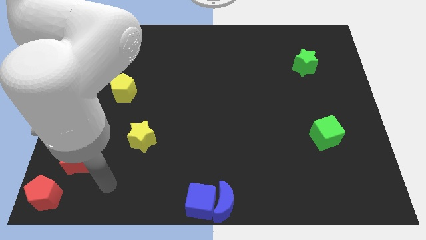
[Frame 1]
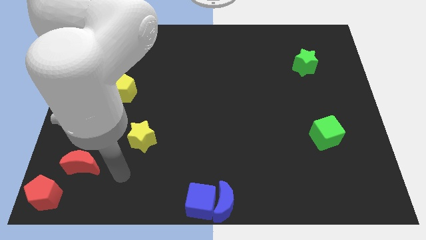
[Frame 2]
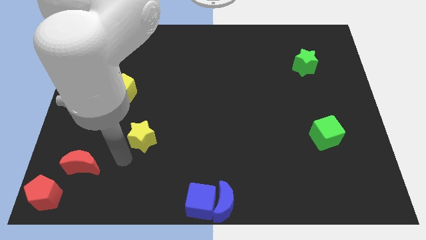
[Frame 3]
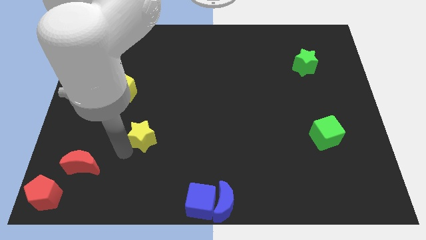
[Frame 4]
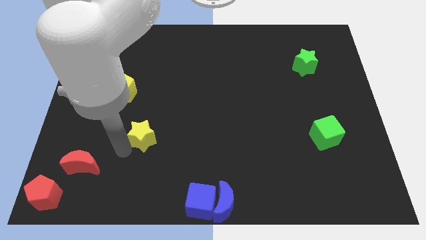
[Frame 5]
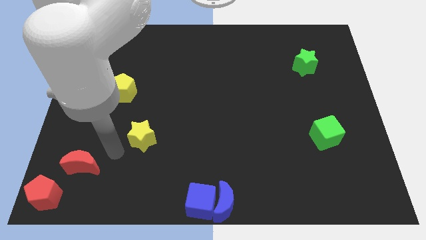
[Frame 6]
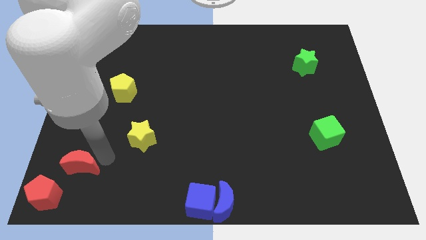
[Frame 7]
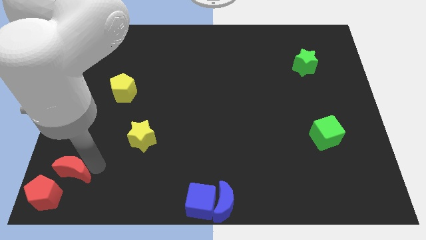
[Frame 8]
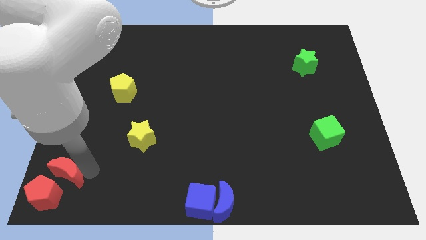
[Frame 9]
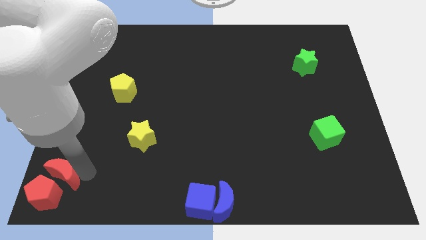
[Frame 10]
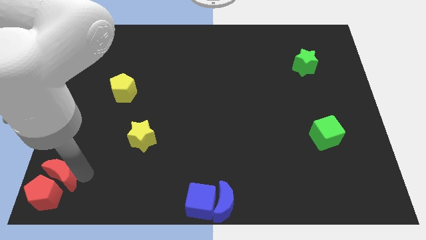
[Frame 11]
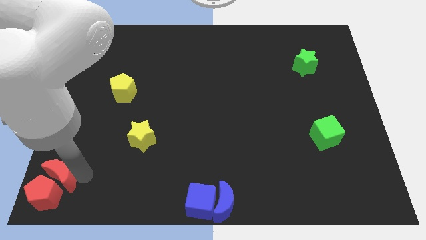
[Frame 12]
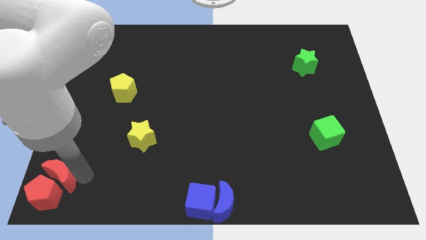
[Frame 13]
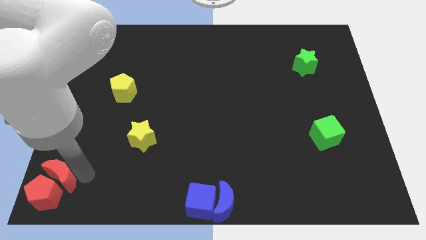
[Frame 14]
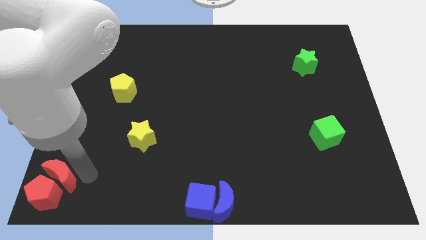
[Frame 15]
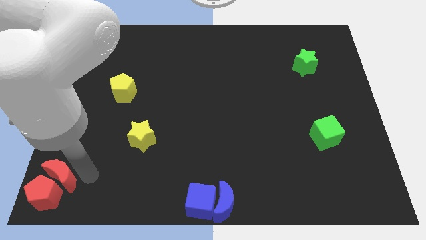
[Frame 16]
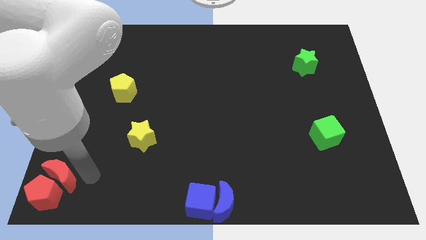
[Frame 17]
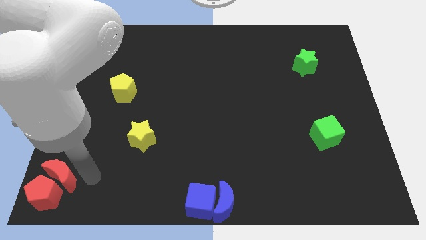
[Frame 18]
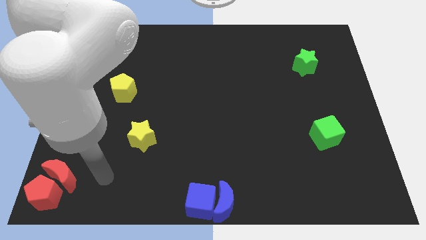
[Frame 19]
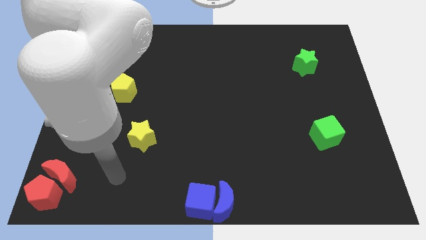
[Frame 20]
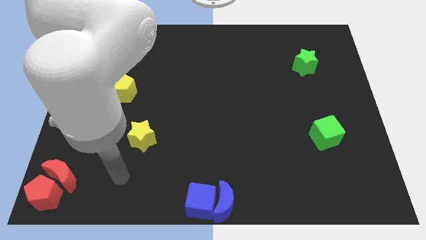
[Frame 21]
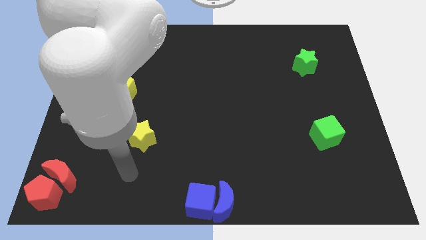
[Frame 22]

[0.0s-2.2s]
move the red blocks to the bottom left corner of the board

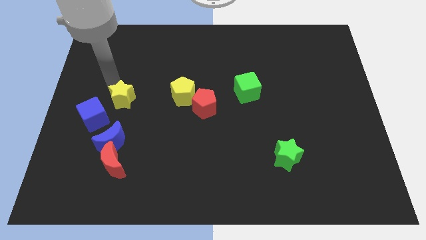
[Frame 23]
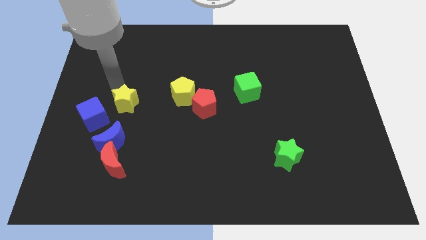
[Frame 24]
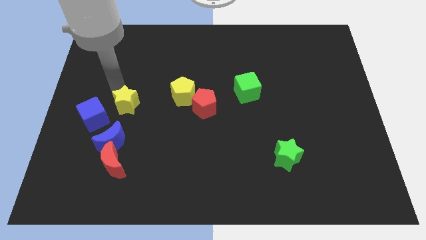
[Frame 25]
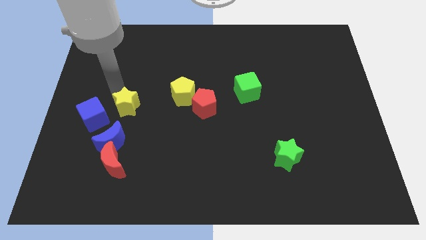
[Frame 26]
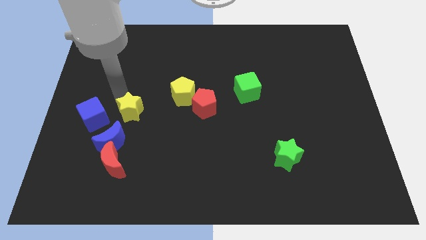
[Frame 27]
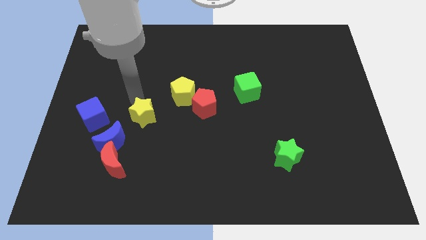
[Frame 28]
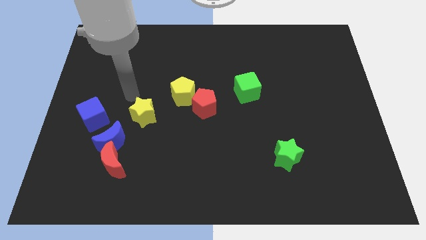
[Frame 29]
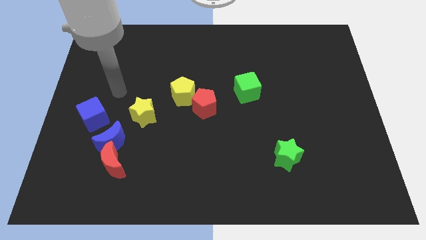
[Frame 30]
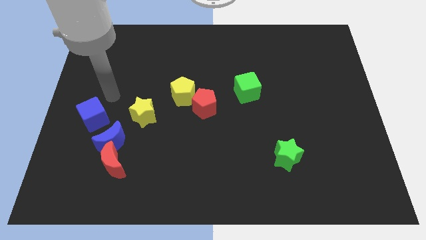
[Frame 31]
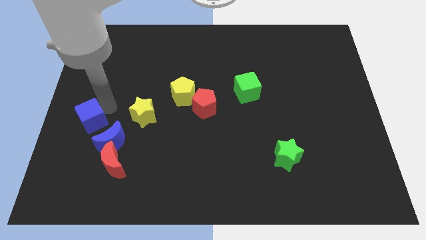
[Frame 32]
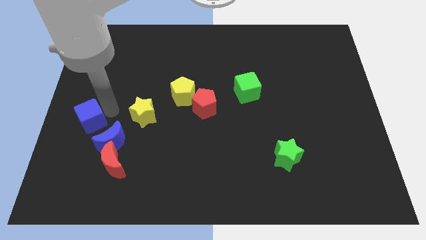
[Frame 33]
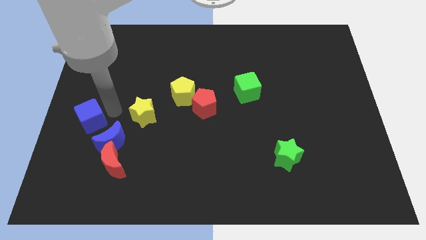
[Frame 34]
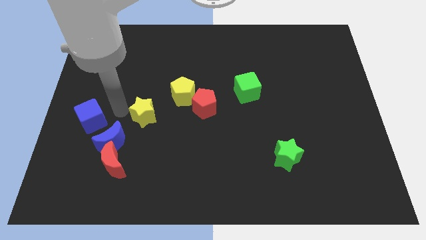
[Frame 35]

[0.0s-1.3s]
push the yellow star to the top of the blue crescent

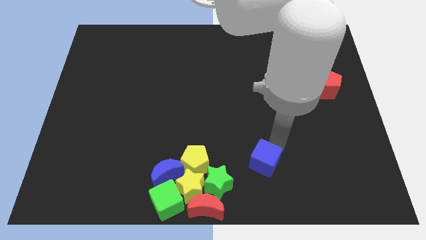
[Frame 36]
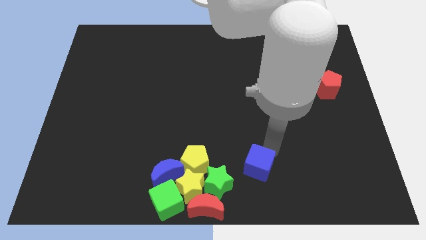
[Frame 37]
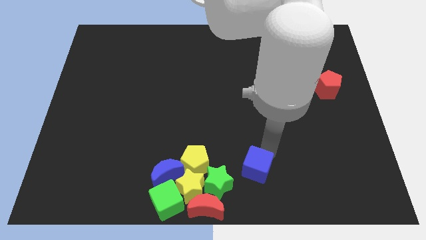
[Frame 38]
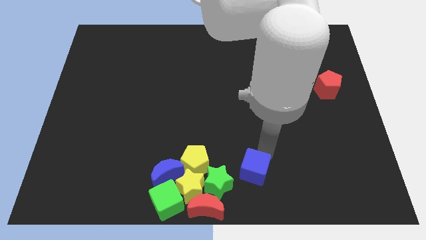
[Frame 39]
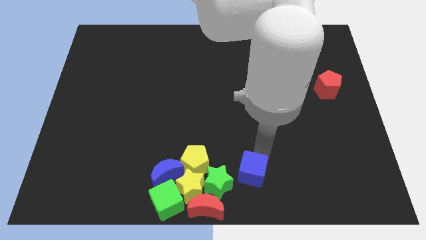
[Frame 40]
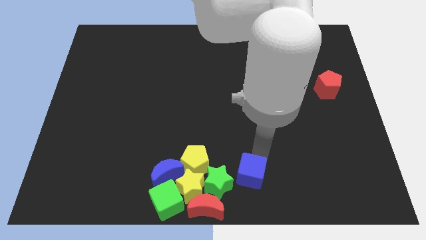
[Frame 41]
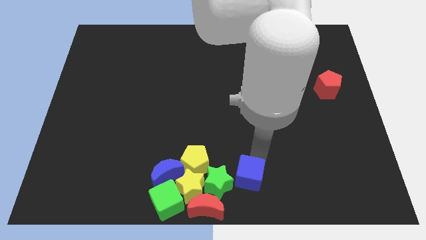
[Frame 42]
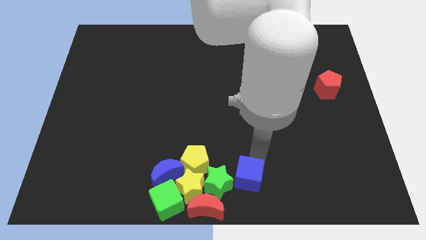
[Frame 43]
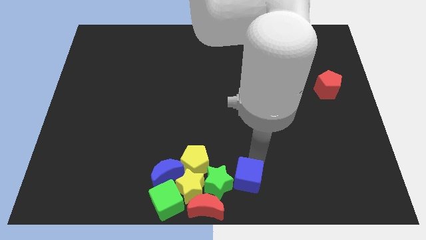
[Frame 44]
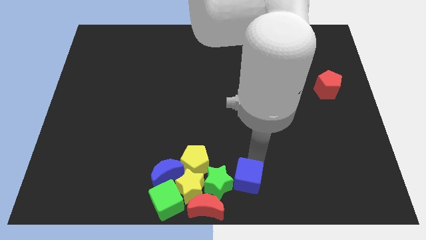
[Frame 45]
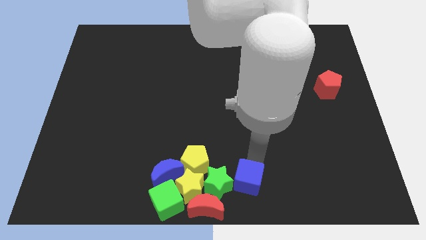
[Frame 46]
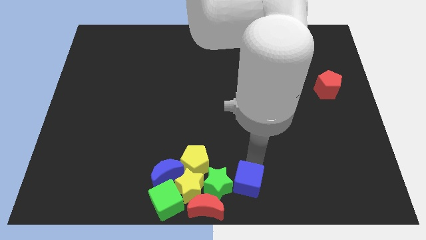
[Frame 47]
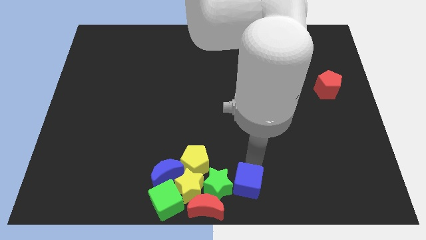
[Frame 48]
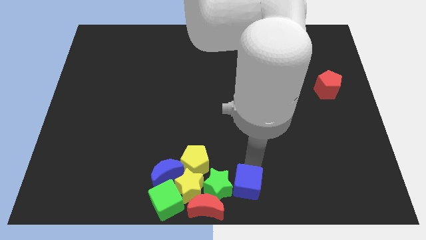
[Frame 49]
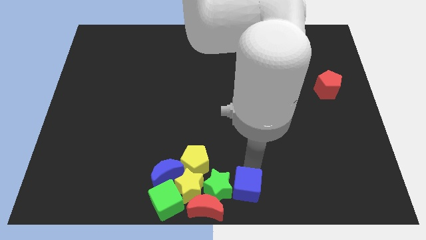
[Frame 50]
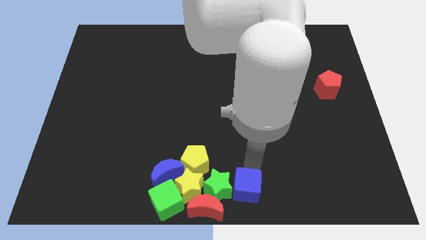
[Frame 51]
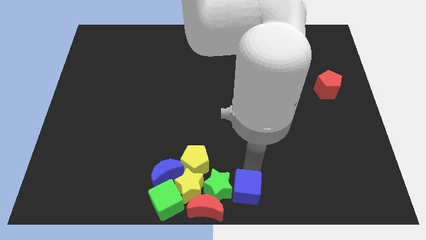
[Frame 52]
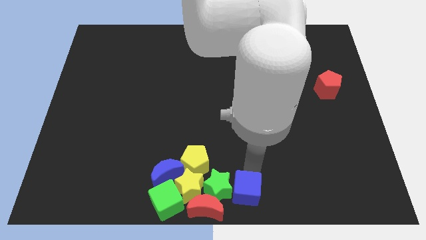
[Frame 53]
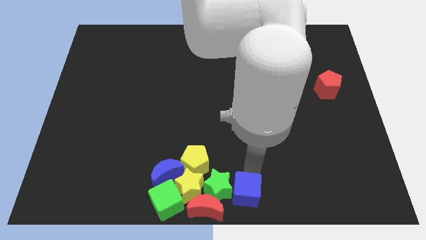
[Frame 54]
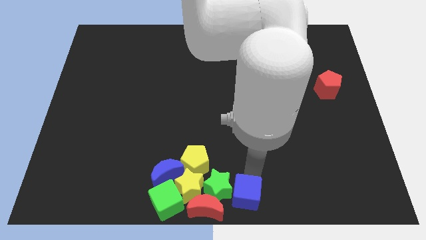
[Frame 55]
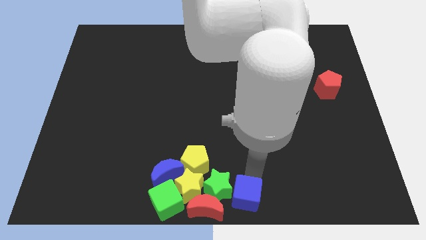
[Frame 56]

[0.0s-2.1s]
place the blue cube to the right side of the green star

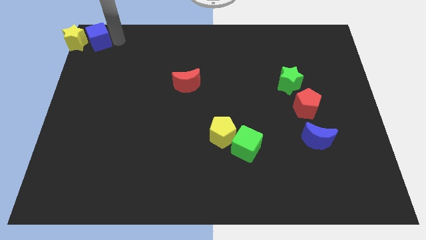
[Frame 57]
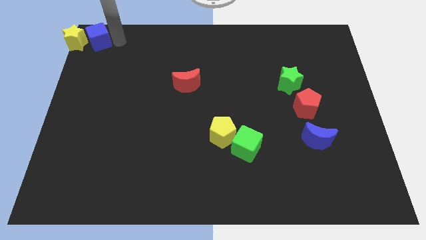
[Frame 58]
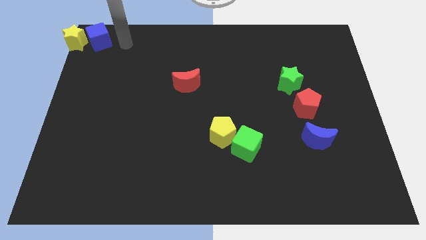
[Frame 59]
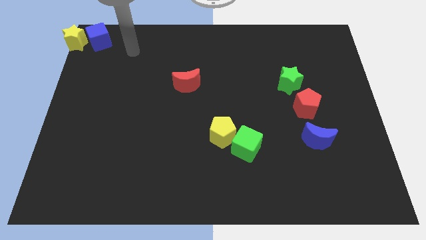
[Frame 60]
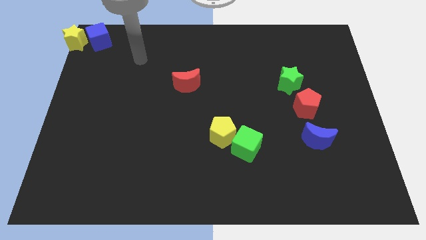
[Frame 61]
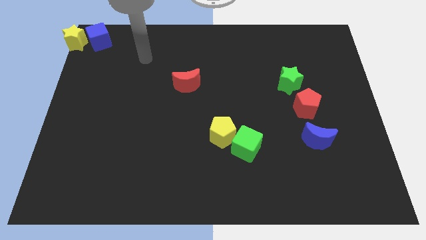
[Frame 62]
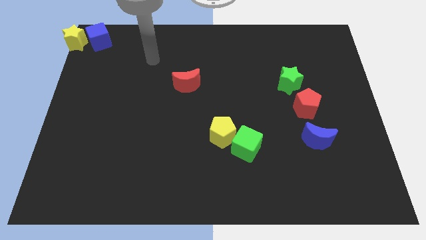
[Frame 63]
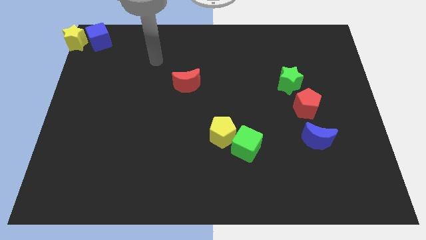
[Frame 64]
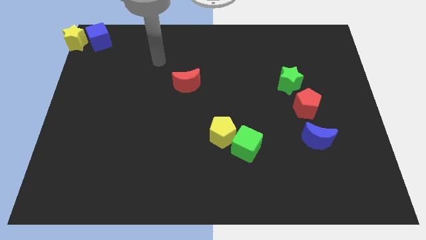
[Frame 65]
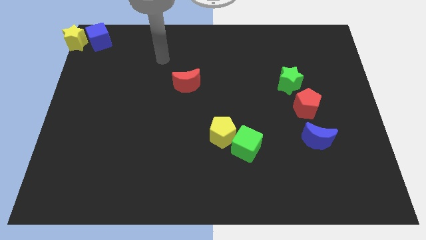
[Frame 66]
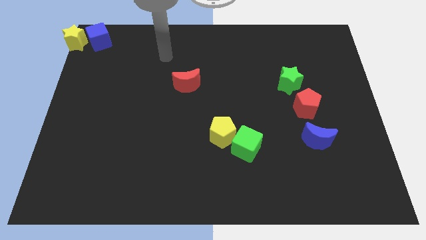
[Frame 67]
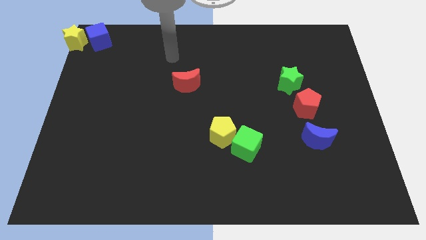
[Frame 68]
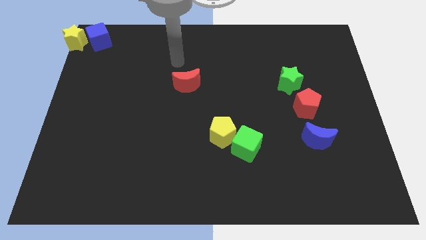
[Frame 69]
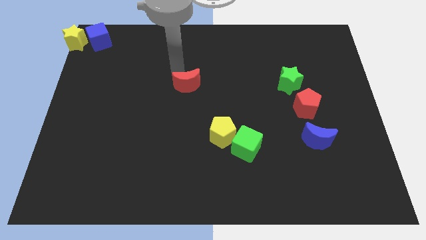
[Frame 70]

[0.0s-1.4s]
point the arm above the red moon

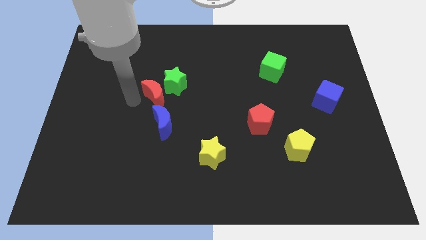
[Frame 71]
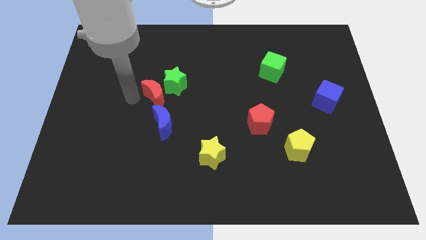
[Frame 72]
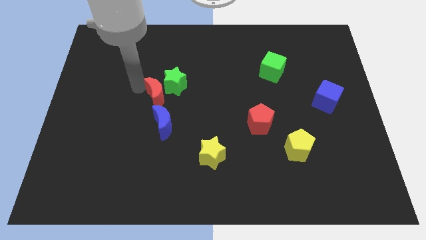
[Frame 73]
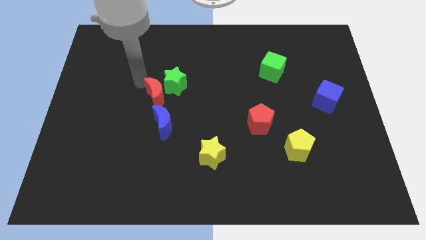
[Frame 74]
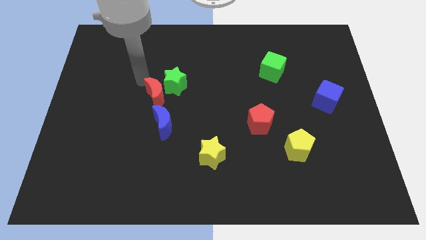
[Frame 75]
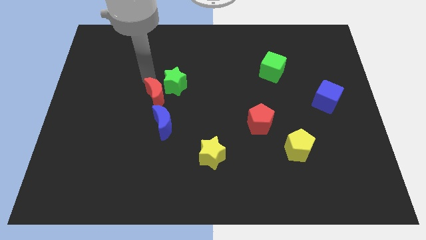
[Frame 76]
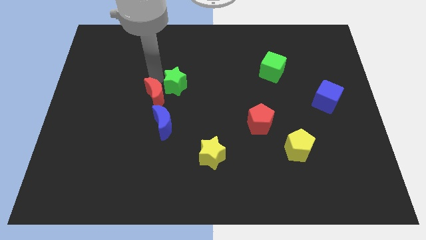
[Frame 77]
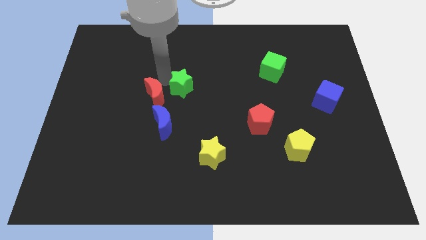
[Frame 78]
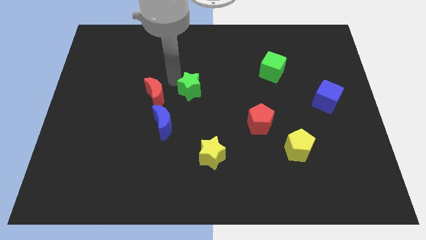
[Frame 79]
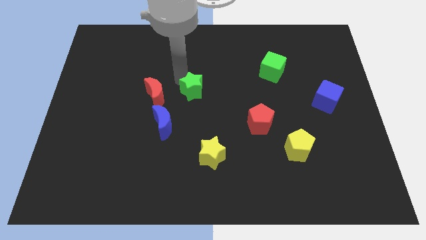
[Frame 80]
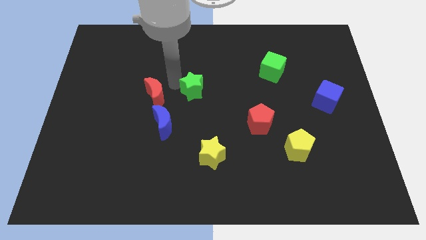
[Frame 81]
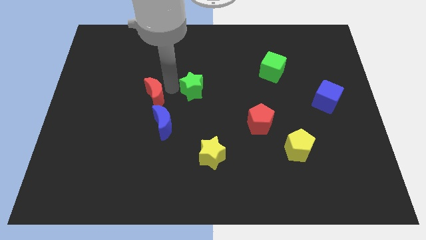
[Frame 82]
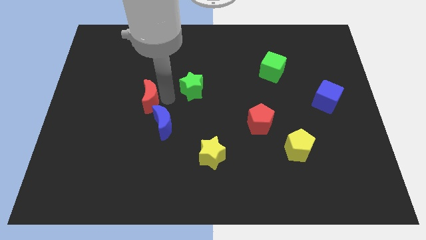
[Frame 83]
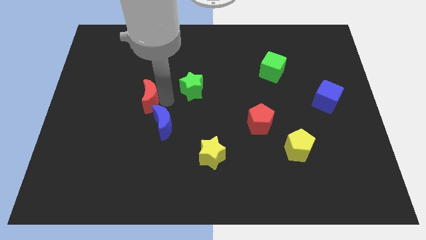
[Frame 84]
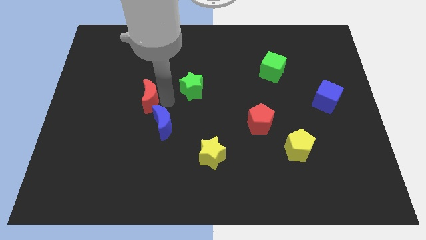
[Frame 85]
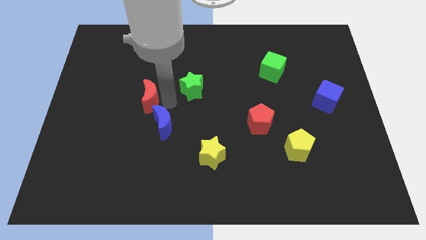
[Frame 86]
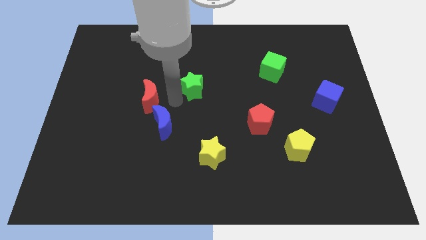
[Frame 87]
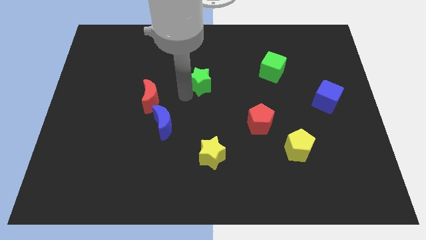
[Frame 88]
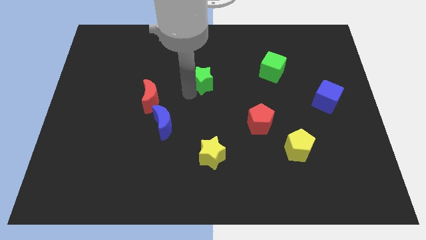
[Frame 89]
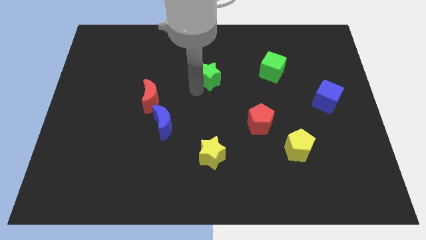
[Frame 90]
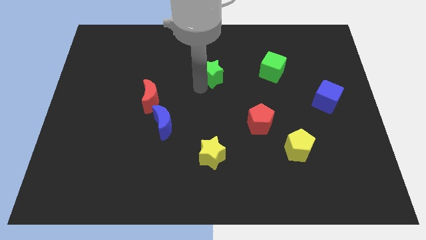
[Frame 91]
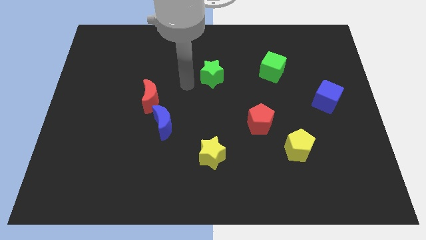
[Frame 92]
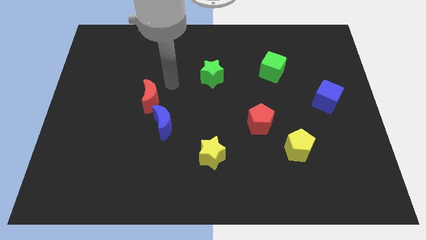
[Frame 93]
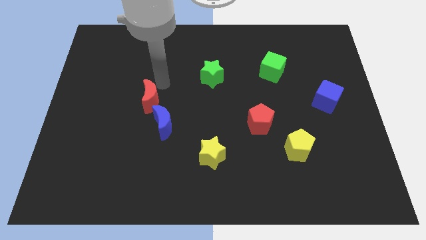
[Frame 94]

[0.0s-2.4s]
slide the green star above the yellow star
